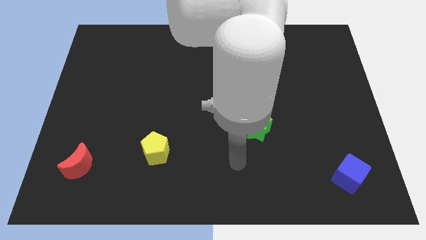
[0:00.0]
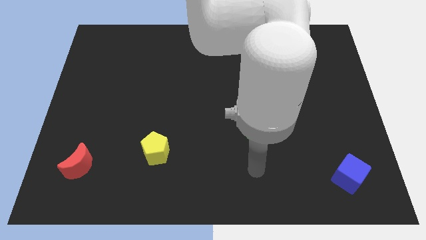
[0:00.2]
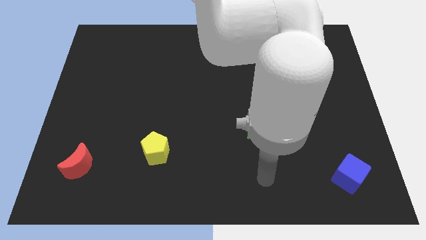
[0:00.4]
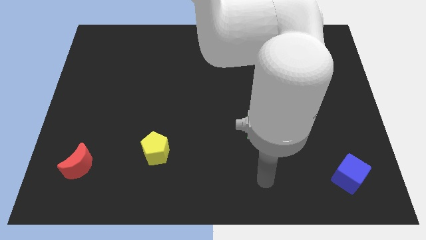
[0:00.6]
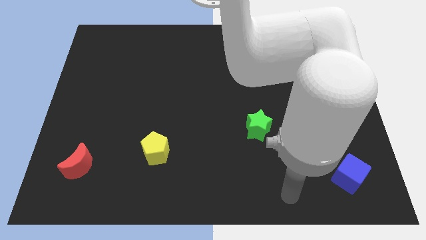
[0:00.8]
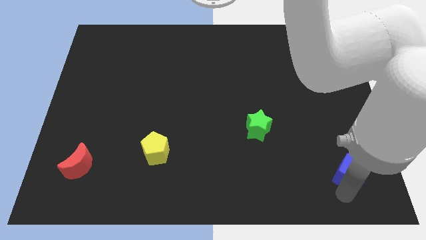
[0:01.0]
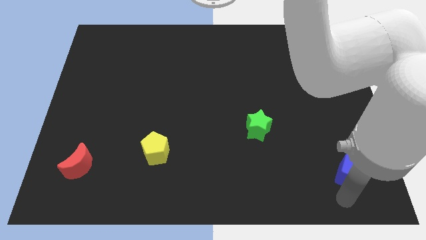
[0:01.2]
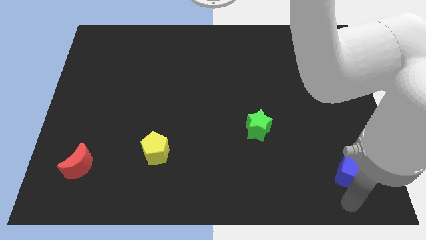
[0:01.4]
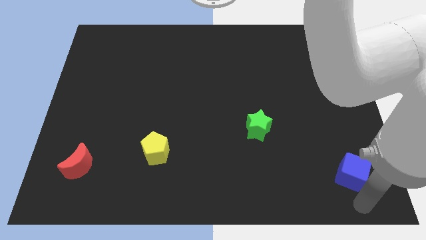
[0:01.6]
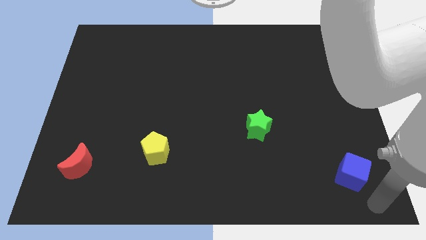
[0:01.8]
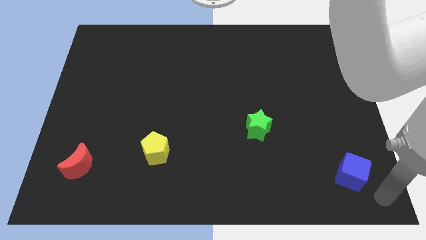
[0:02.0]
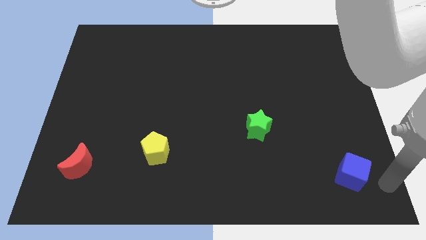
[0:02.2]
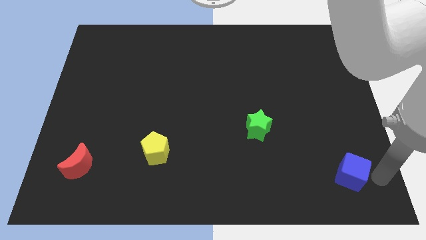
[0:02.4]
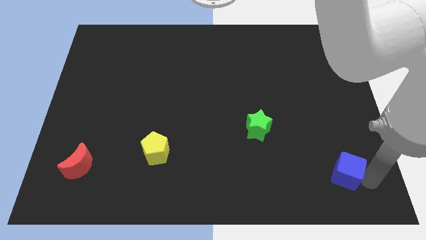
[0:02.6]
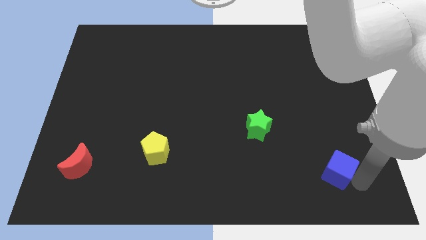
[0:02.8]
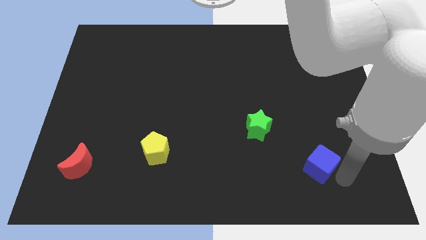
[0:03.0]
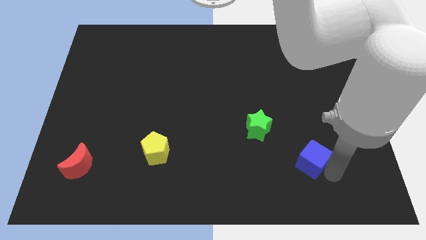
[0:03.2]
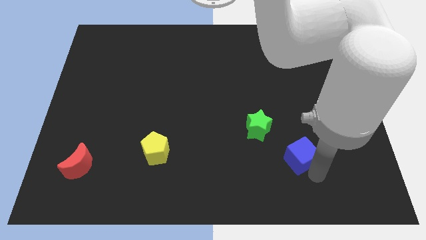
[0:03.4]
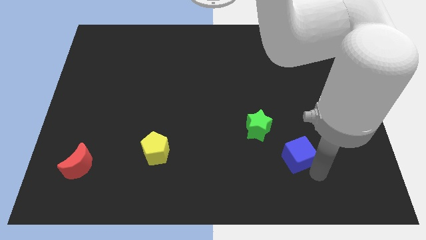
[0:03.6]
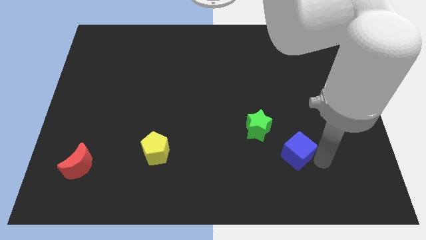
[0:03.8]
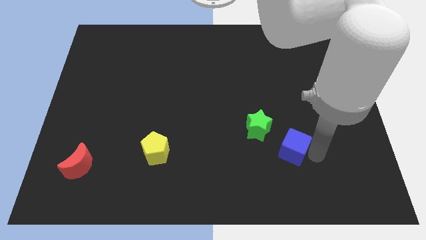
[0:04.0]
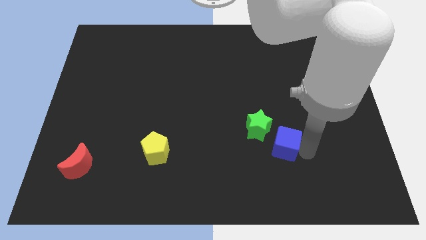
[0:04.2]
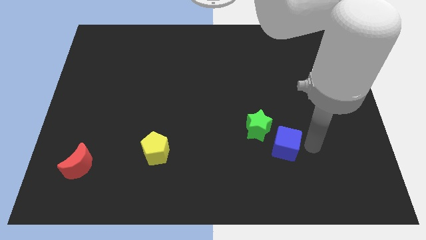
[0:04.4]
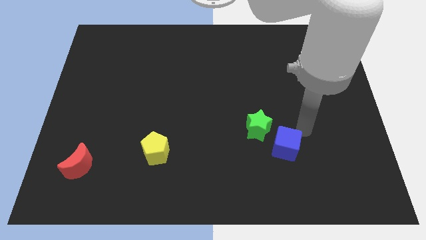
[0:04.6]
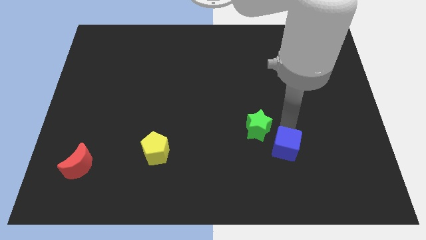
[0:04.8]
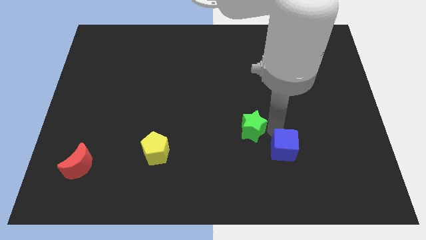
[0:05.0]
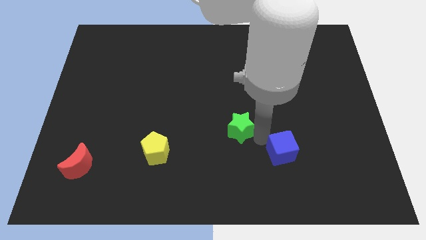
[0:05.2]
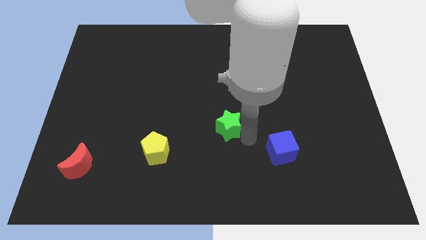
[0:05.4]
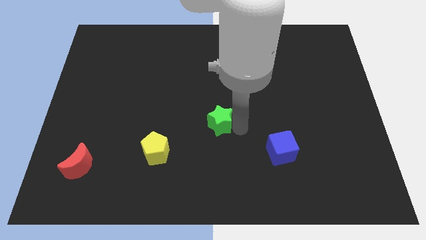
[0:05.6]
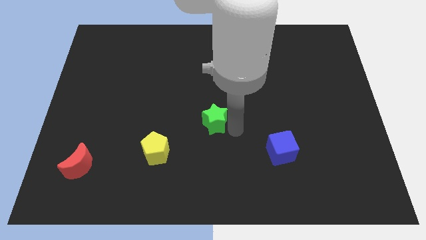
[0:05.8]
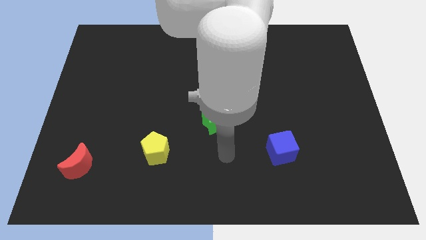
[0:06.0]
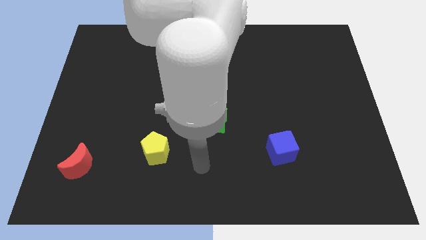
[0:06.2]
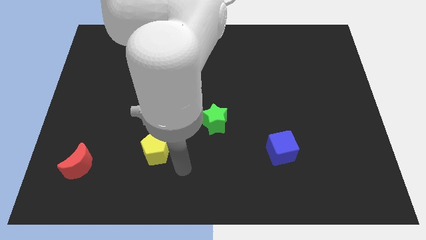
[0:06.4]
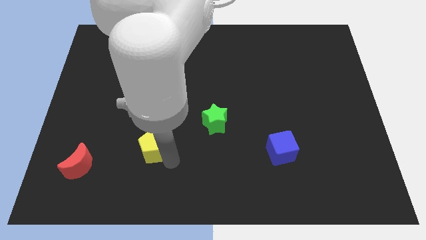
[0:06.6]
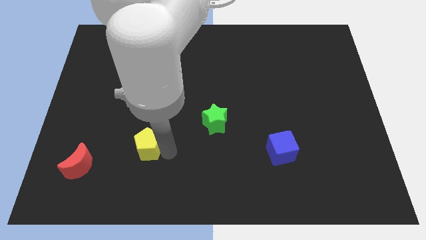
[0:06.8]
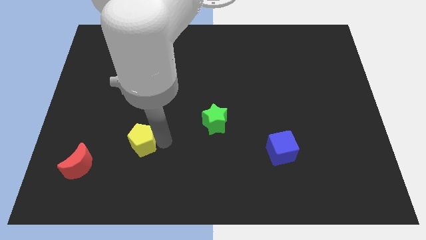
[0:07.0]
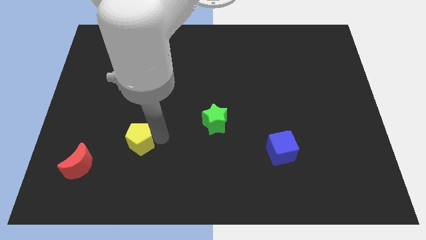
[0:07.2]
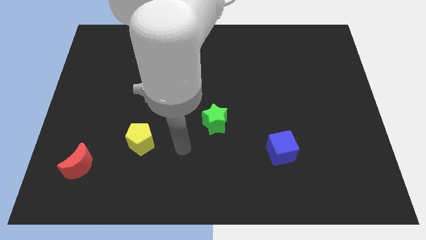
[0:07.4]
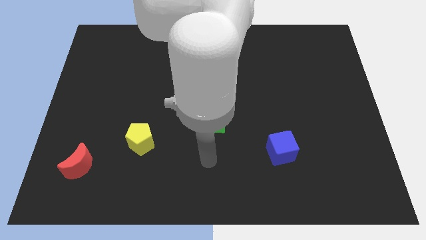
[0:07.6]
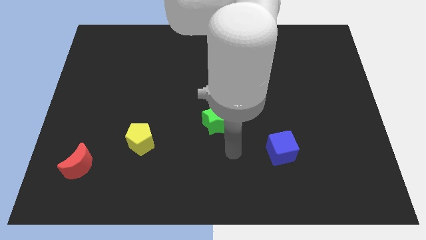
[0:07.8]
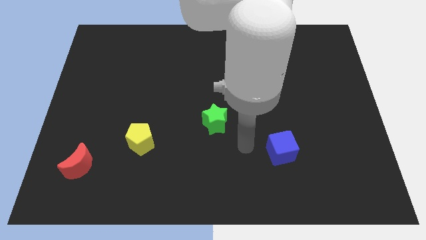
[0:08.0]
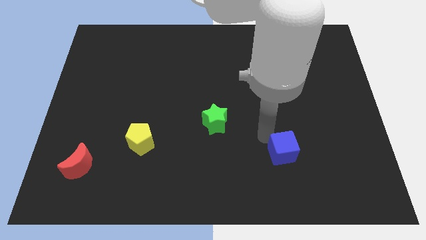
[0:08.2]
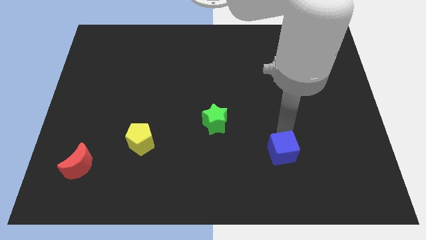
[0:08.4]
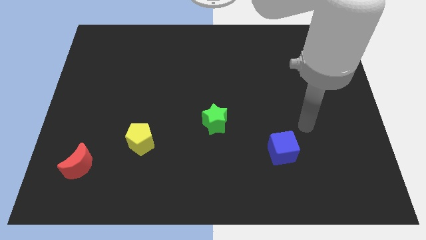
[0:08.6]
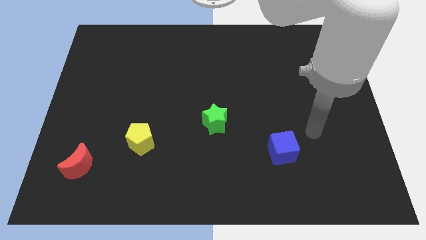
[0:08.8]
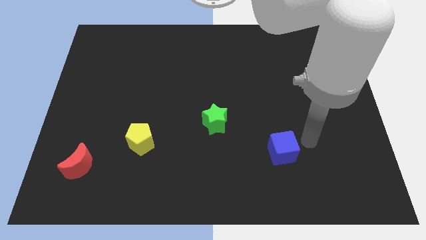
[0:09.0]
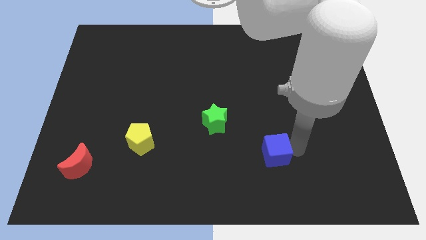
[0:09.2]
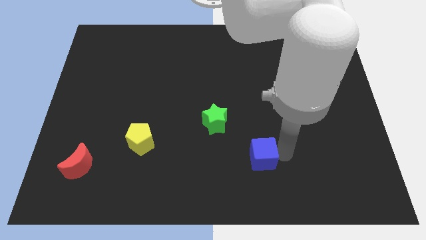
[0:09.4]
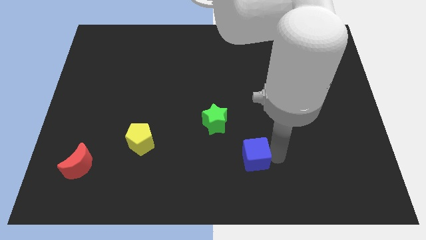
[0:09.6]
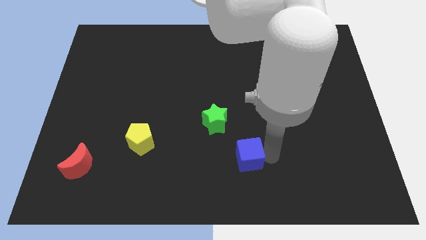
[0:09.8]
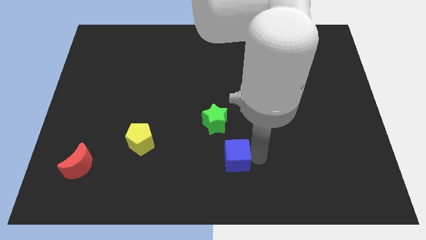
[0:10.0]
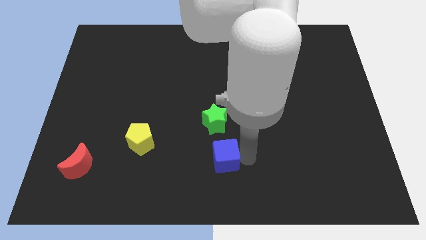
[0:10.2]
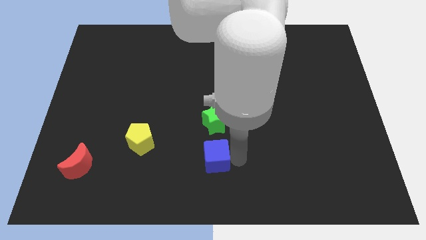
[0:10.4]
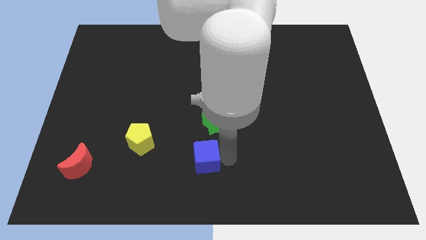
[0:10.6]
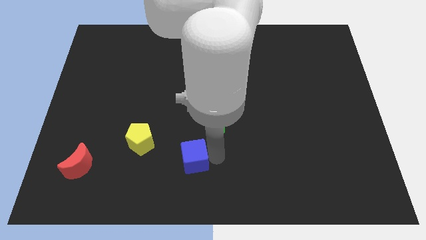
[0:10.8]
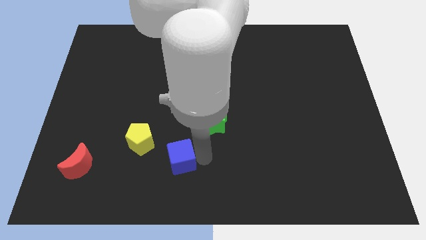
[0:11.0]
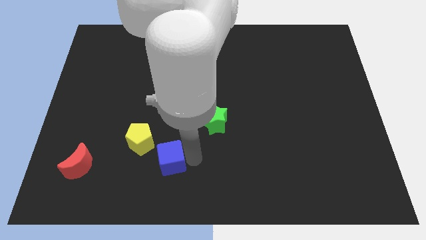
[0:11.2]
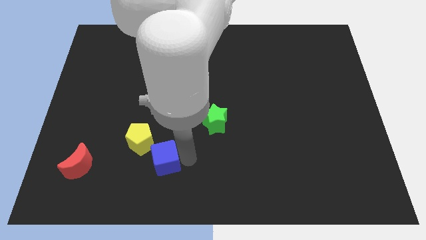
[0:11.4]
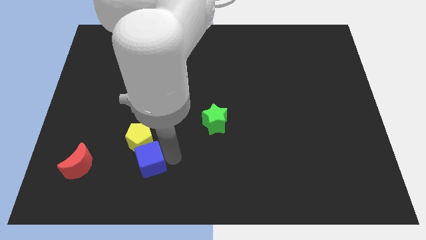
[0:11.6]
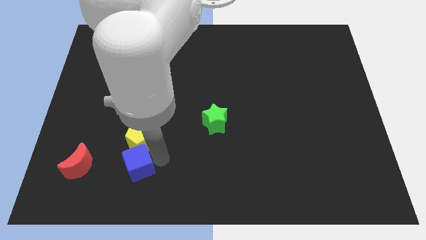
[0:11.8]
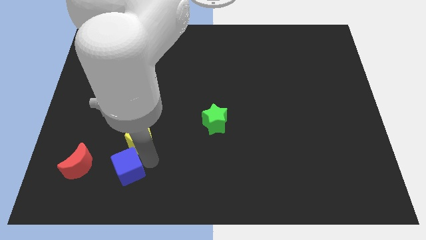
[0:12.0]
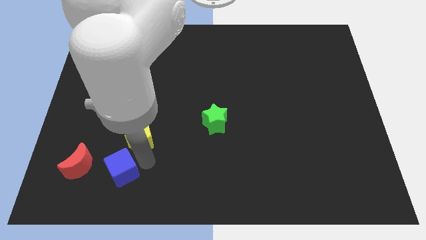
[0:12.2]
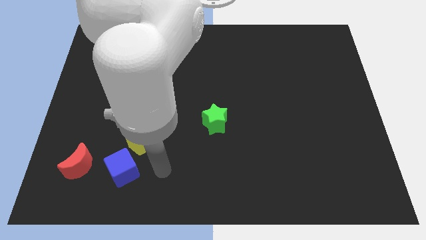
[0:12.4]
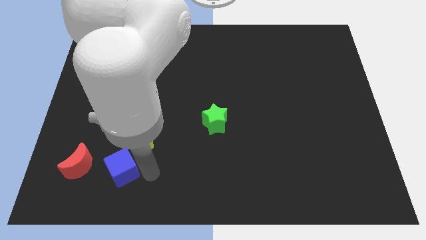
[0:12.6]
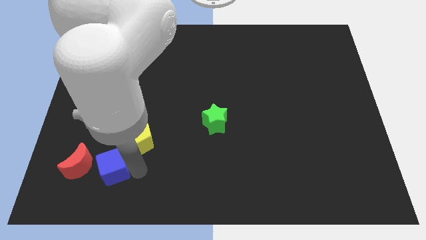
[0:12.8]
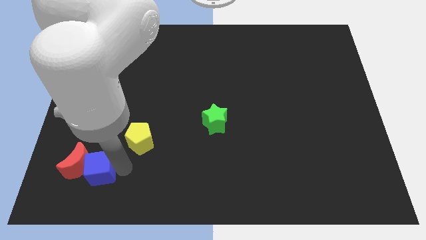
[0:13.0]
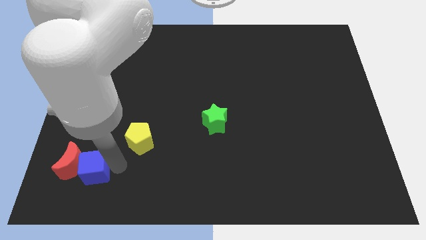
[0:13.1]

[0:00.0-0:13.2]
push the cube towards the red moon

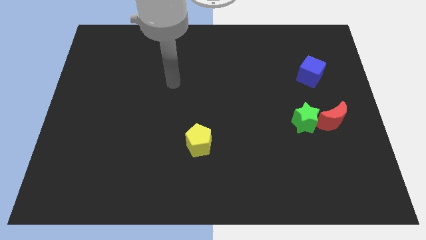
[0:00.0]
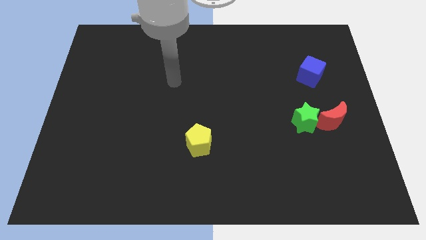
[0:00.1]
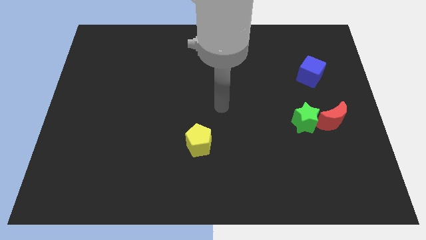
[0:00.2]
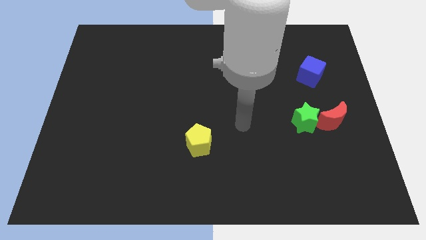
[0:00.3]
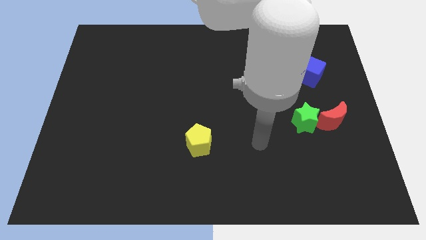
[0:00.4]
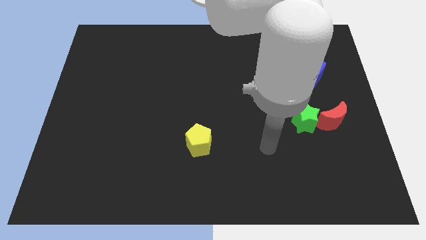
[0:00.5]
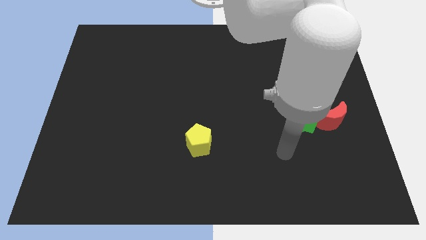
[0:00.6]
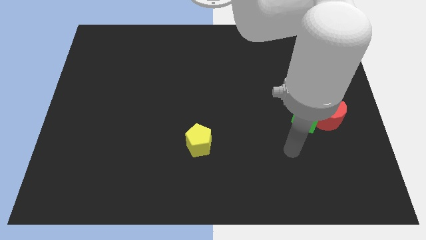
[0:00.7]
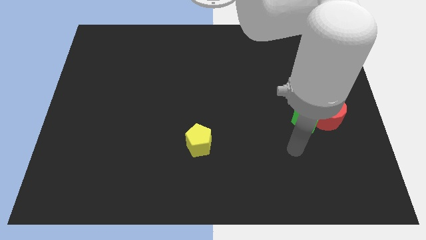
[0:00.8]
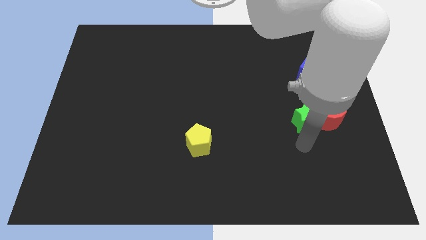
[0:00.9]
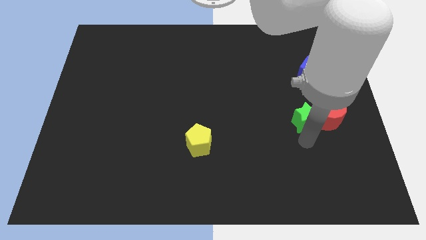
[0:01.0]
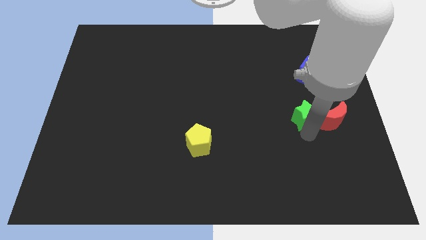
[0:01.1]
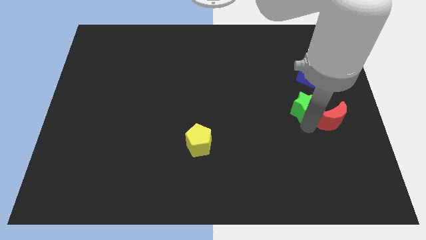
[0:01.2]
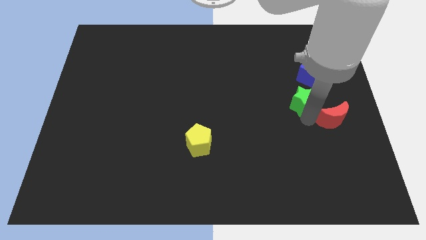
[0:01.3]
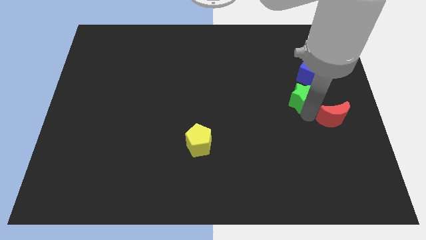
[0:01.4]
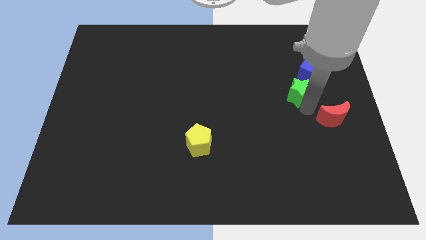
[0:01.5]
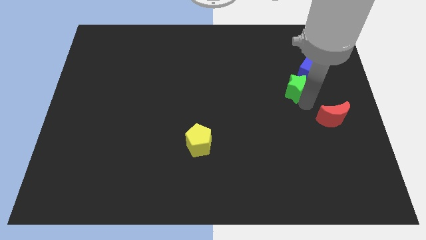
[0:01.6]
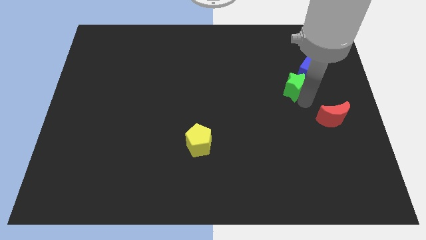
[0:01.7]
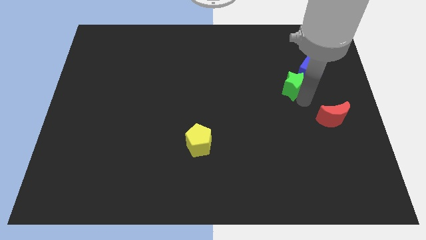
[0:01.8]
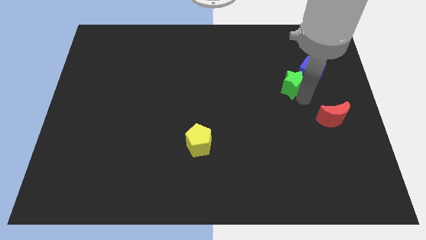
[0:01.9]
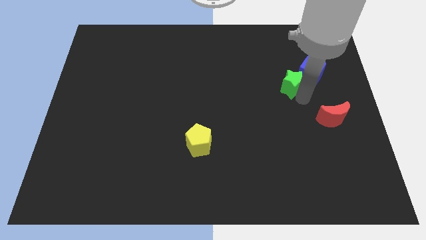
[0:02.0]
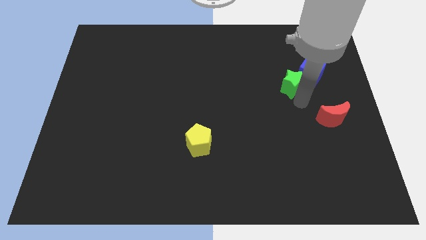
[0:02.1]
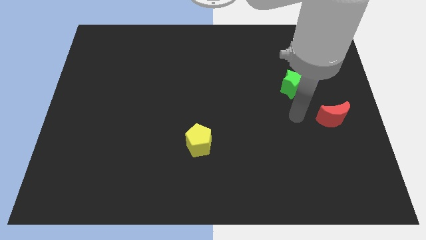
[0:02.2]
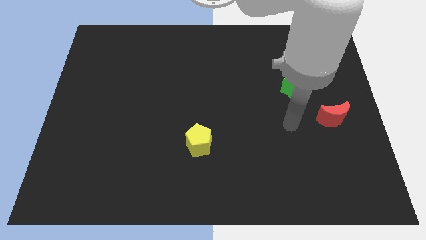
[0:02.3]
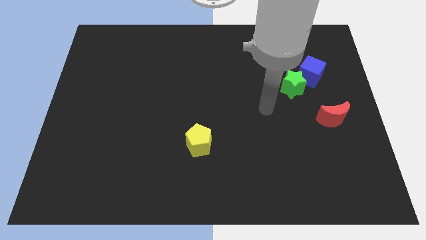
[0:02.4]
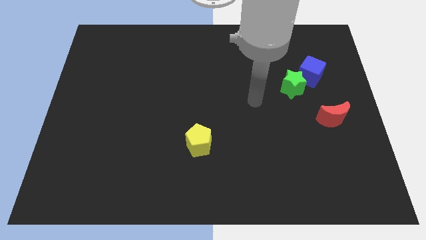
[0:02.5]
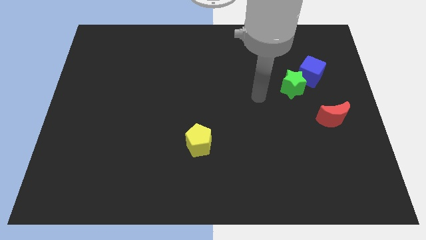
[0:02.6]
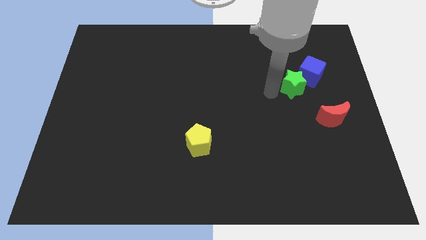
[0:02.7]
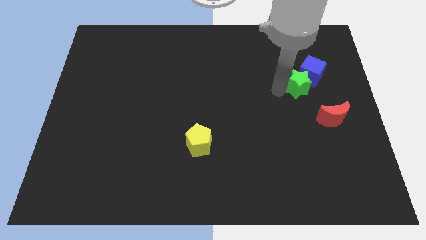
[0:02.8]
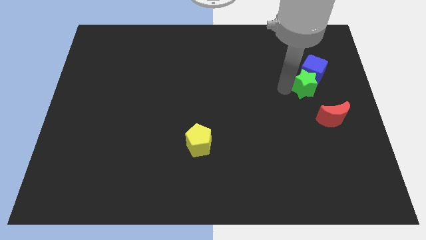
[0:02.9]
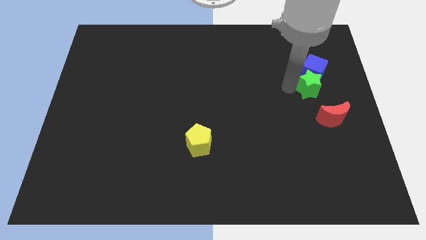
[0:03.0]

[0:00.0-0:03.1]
move the green star close to the cube
